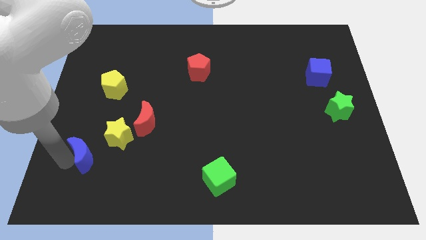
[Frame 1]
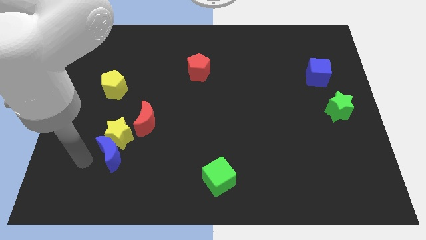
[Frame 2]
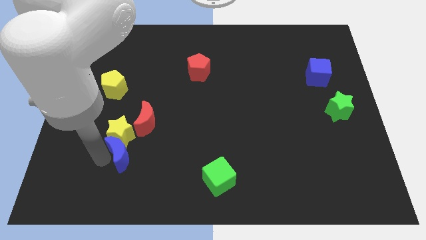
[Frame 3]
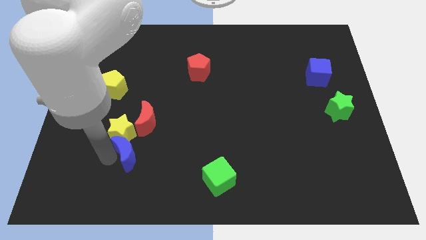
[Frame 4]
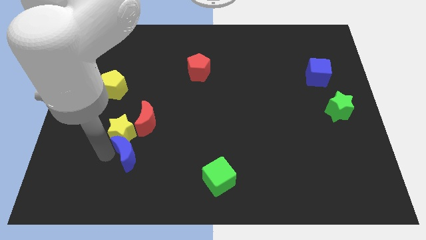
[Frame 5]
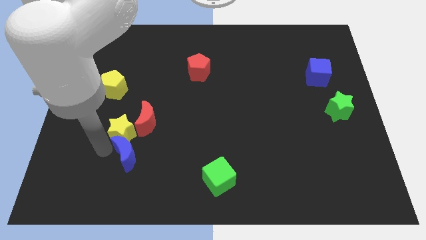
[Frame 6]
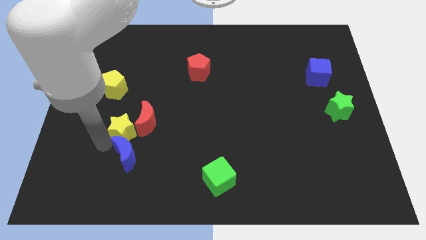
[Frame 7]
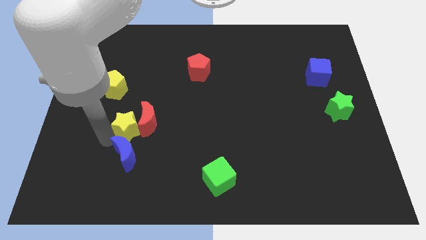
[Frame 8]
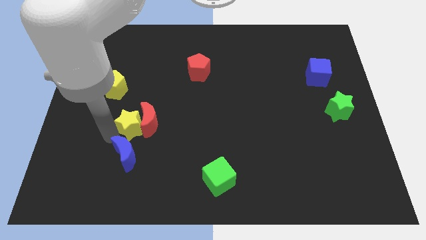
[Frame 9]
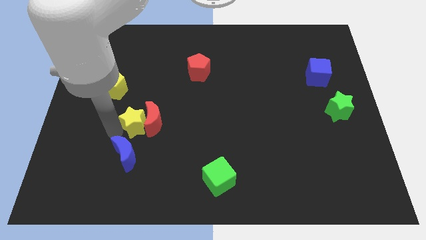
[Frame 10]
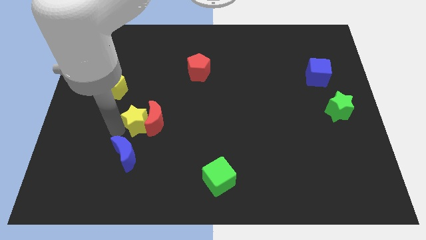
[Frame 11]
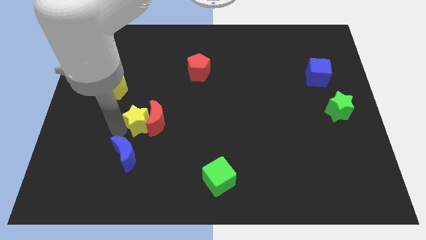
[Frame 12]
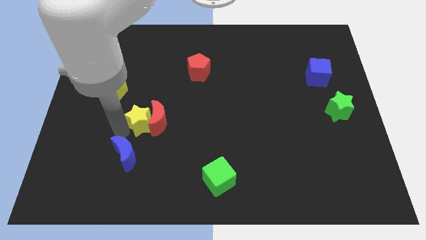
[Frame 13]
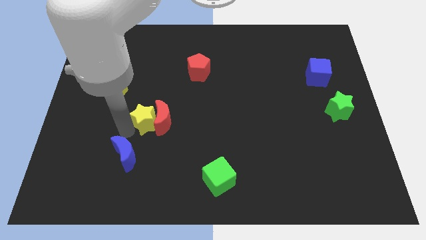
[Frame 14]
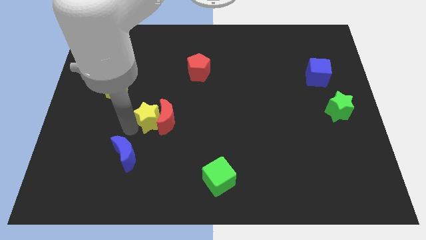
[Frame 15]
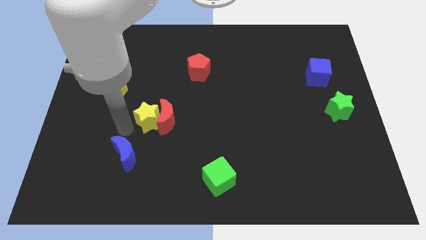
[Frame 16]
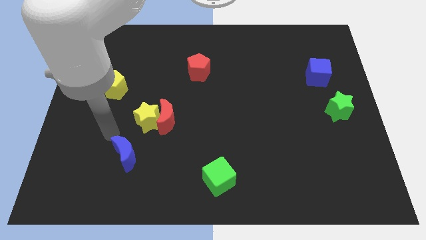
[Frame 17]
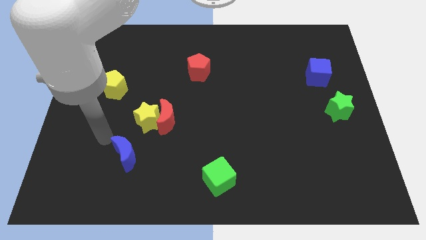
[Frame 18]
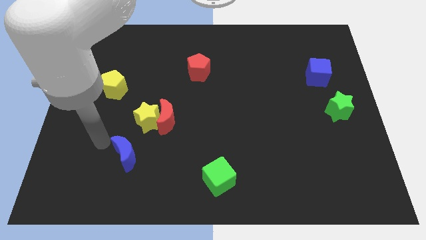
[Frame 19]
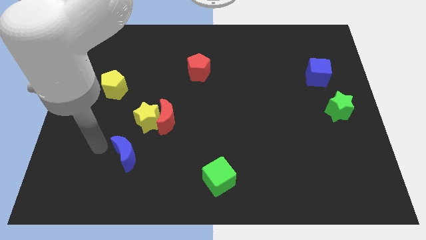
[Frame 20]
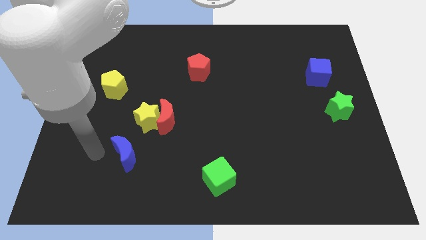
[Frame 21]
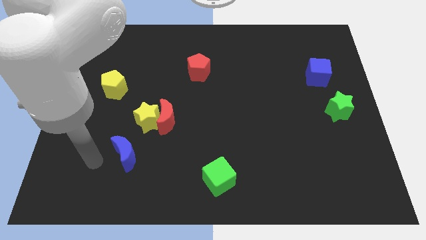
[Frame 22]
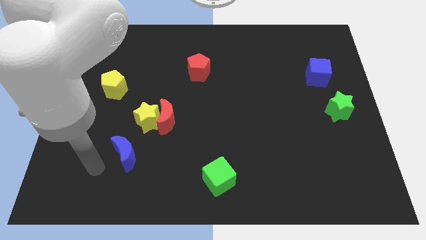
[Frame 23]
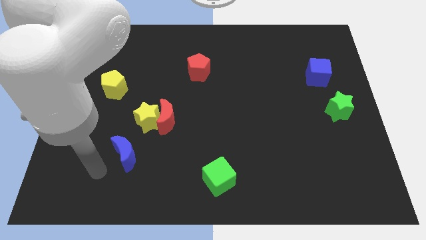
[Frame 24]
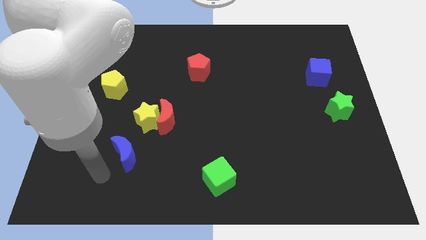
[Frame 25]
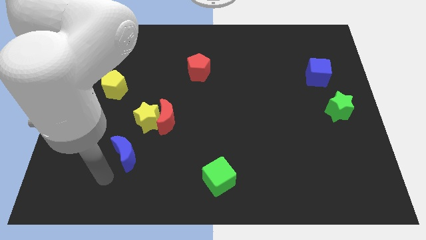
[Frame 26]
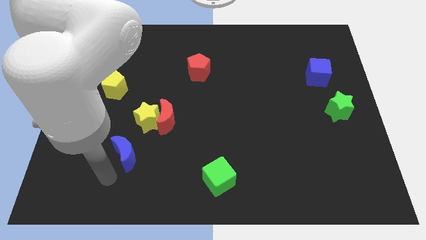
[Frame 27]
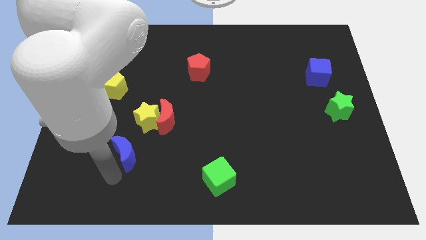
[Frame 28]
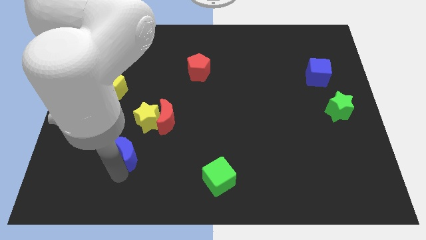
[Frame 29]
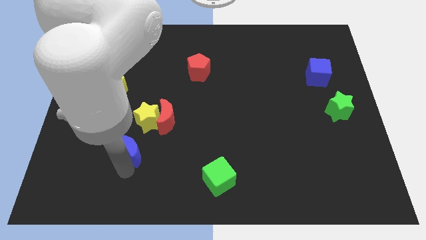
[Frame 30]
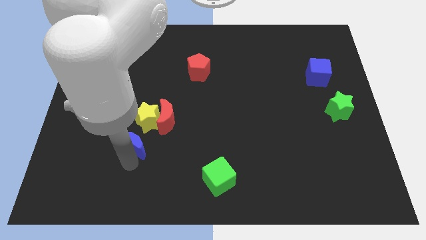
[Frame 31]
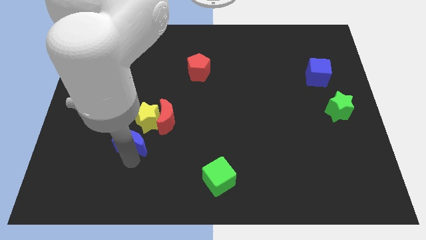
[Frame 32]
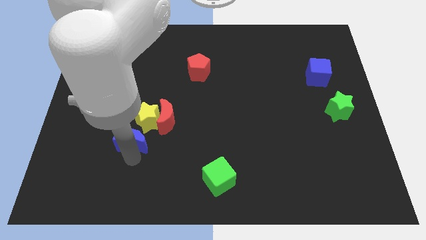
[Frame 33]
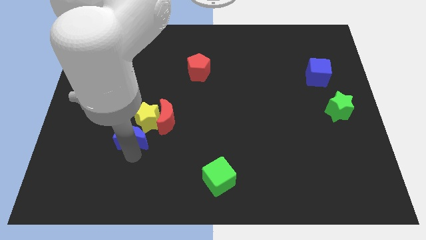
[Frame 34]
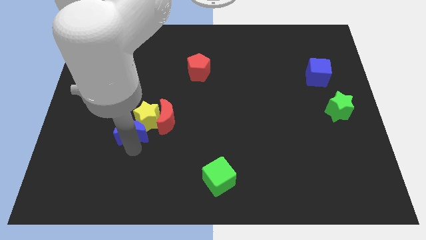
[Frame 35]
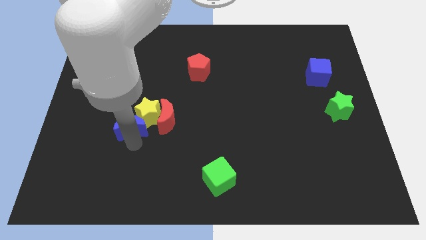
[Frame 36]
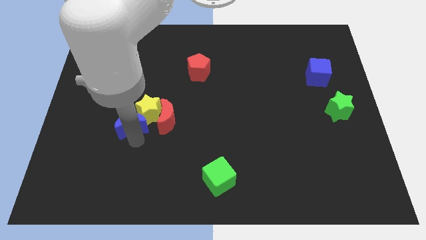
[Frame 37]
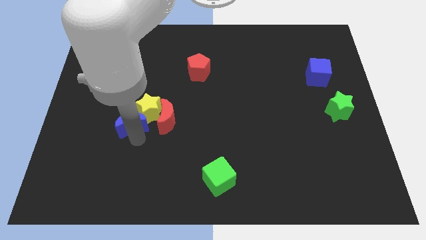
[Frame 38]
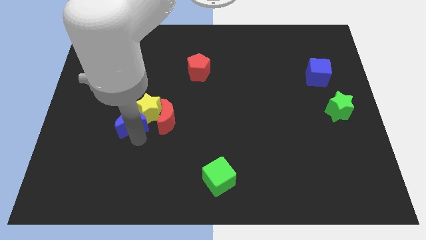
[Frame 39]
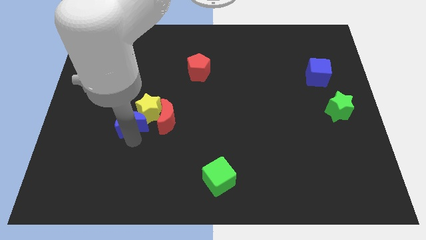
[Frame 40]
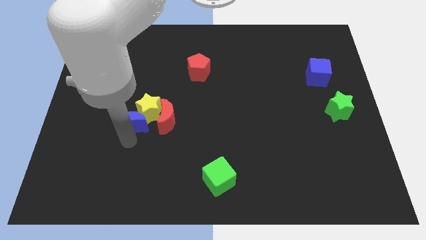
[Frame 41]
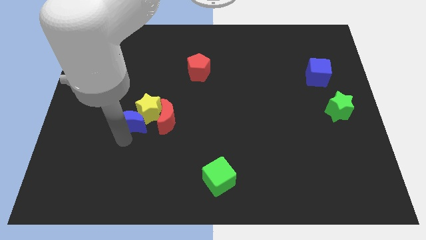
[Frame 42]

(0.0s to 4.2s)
move the yellow star into the red crescent towards right

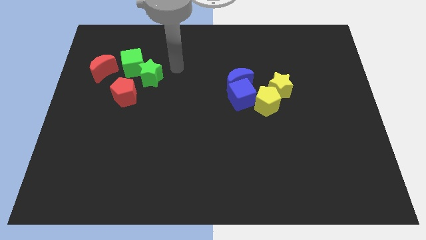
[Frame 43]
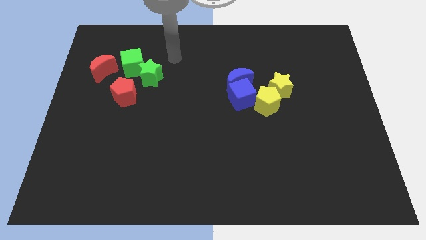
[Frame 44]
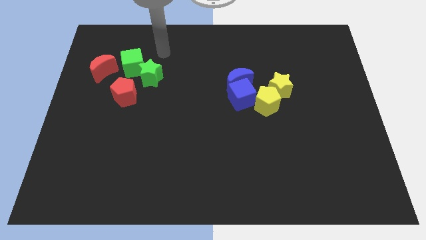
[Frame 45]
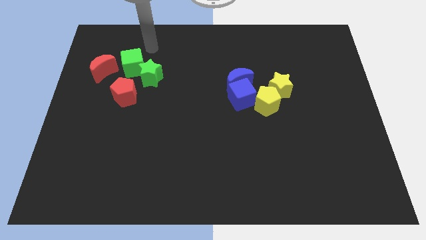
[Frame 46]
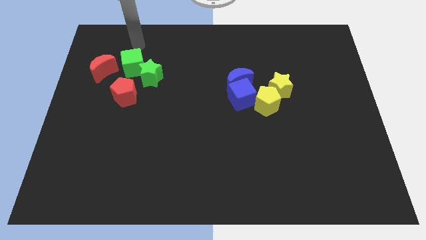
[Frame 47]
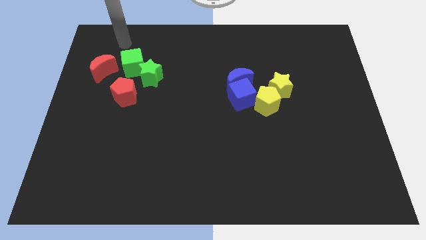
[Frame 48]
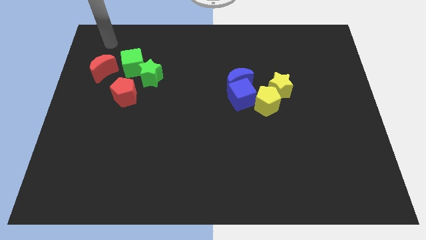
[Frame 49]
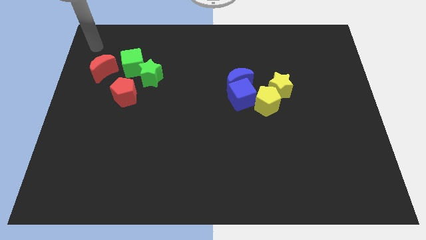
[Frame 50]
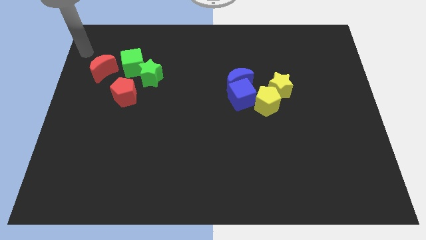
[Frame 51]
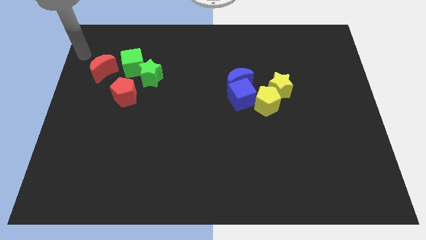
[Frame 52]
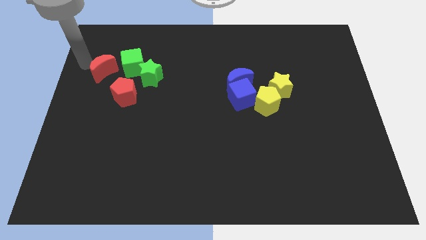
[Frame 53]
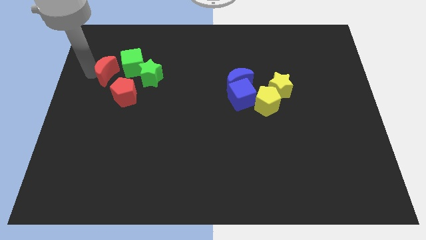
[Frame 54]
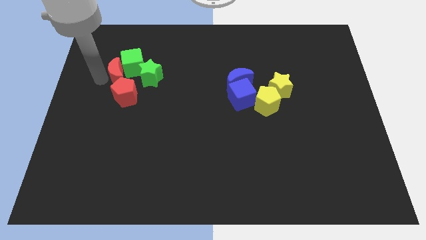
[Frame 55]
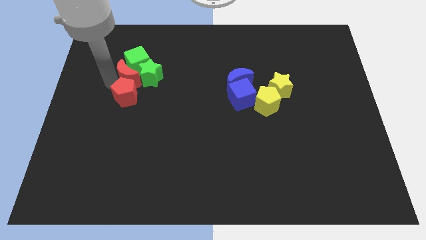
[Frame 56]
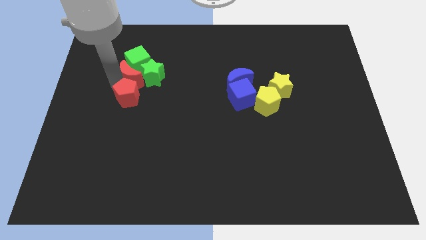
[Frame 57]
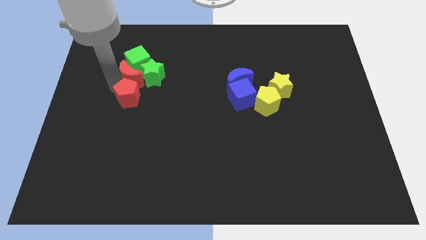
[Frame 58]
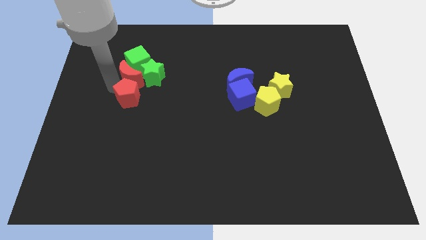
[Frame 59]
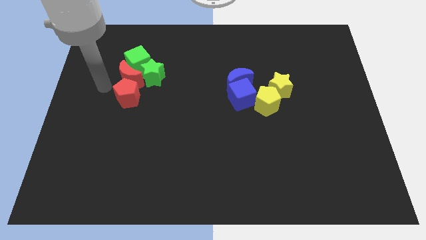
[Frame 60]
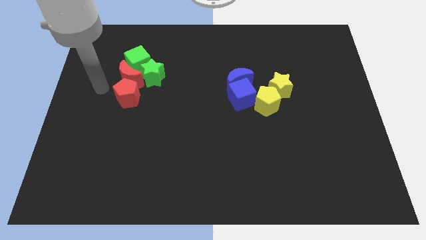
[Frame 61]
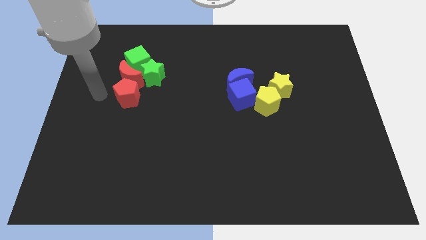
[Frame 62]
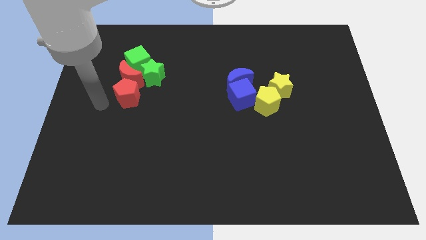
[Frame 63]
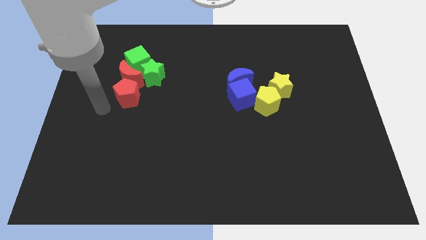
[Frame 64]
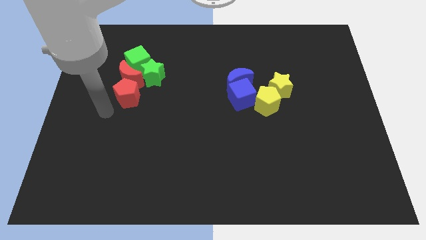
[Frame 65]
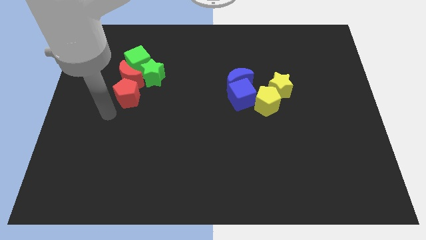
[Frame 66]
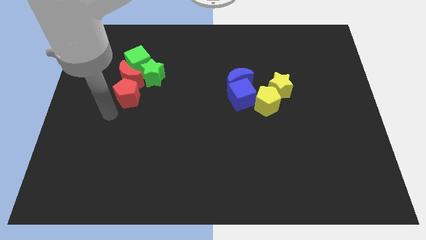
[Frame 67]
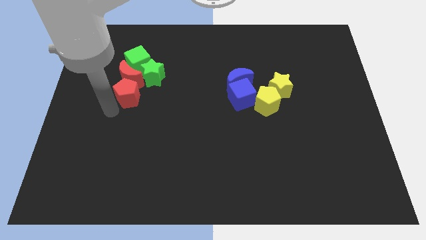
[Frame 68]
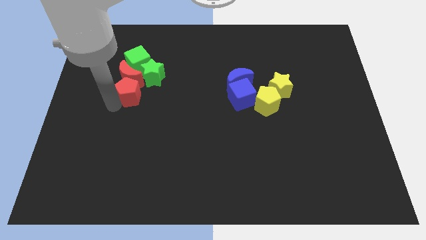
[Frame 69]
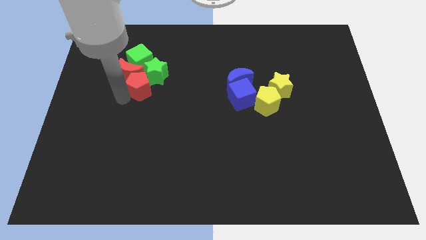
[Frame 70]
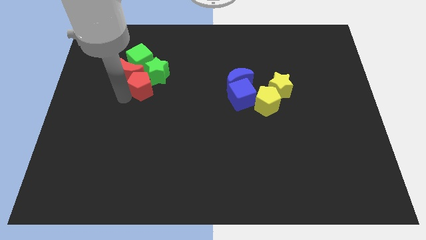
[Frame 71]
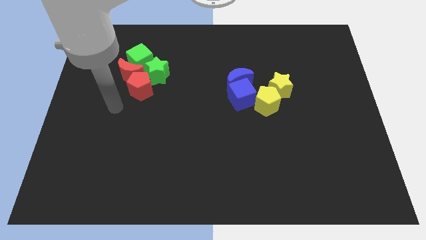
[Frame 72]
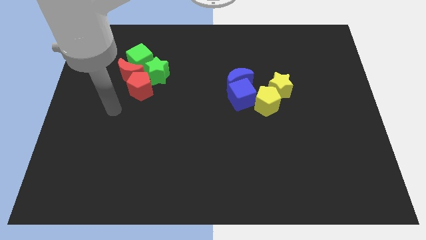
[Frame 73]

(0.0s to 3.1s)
push the red blocks to the left of the green blocks

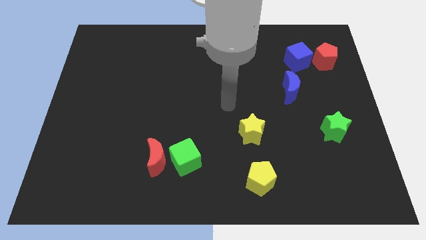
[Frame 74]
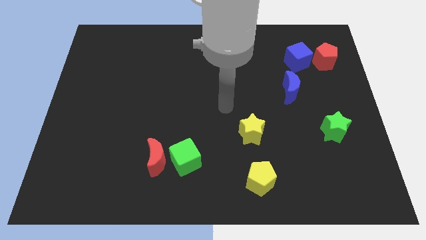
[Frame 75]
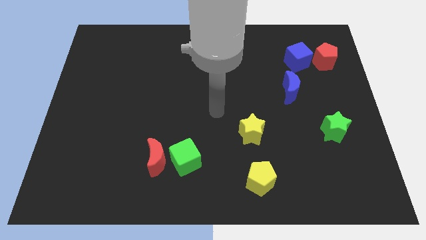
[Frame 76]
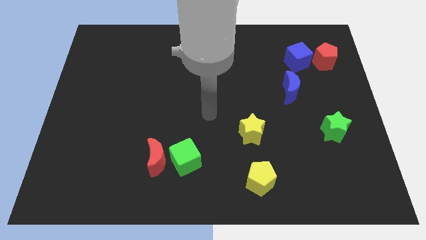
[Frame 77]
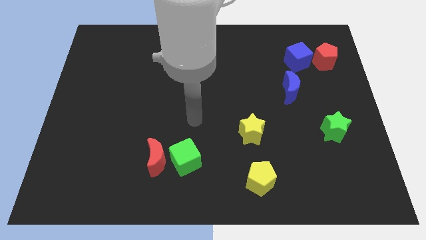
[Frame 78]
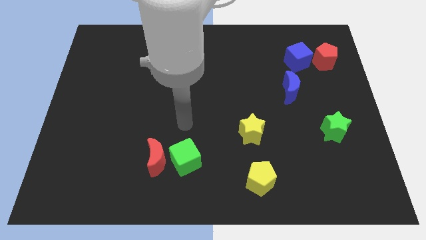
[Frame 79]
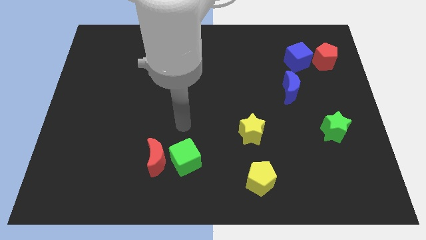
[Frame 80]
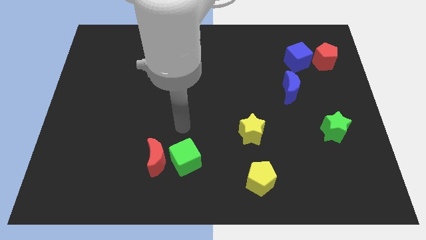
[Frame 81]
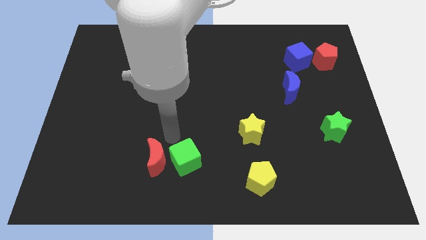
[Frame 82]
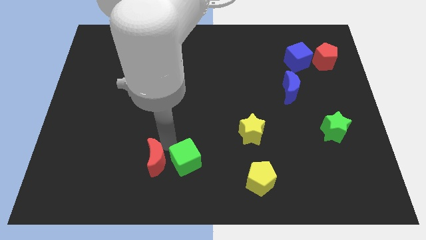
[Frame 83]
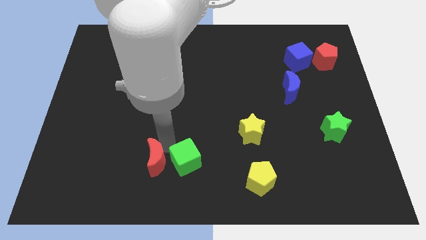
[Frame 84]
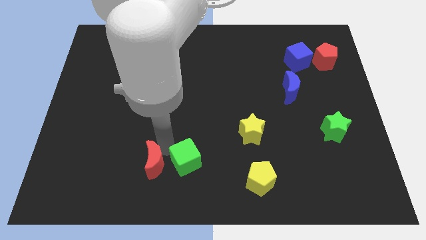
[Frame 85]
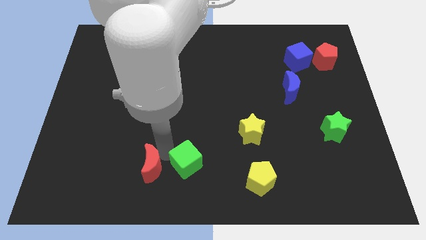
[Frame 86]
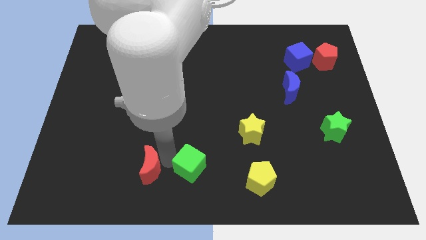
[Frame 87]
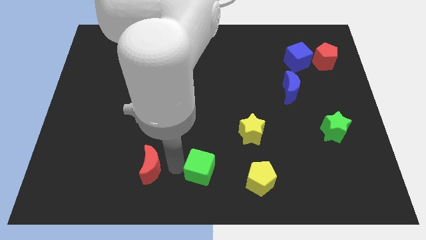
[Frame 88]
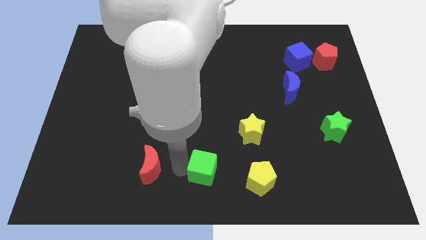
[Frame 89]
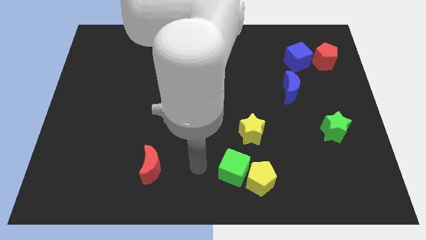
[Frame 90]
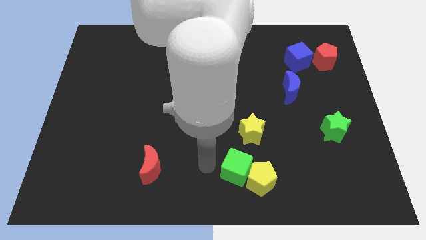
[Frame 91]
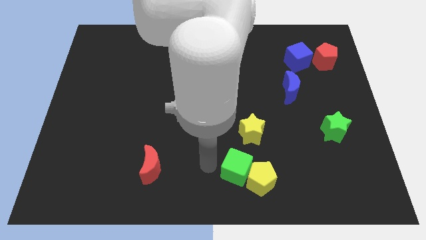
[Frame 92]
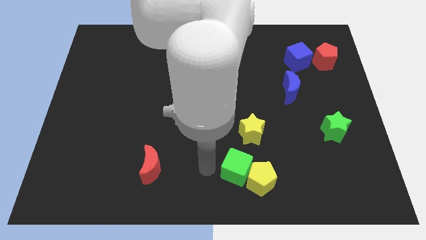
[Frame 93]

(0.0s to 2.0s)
push the green cube into the yellow pentagon
